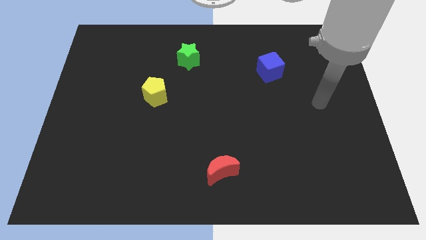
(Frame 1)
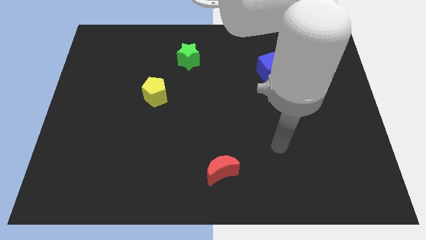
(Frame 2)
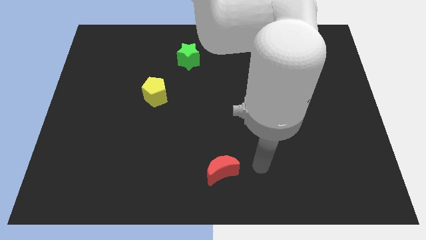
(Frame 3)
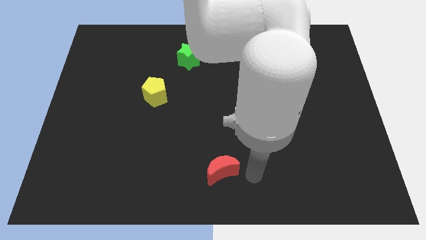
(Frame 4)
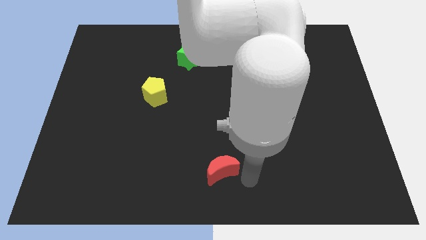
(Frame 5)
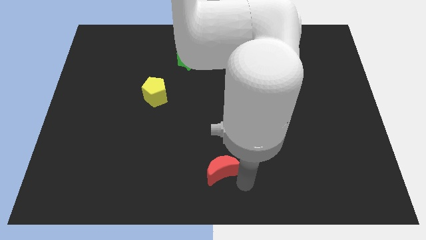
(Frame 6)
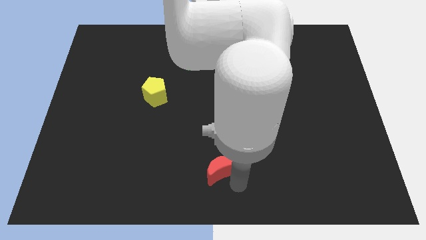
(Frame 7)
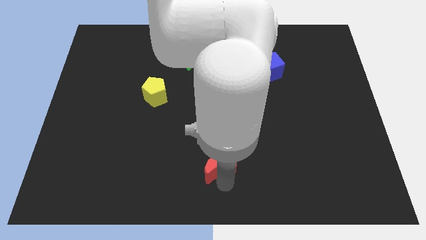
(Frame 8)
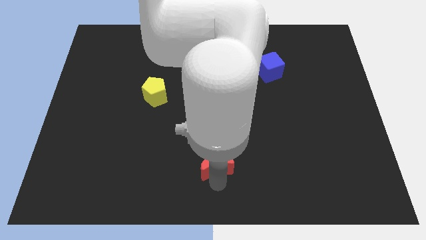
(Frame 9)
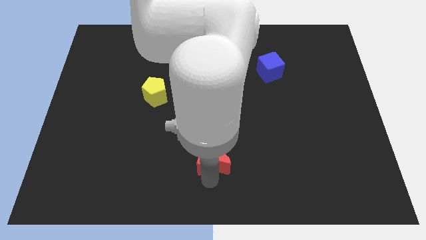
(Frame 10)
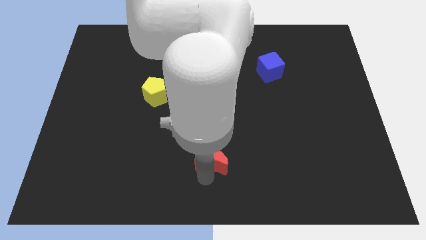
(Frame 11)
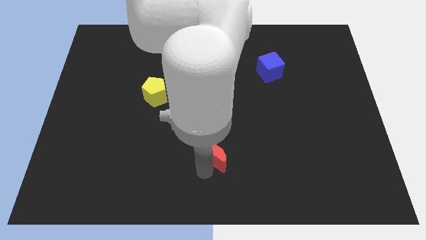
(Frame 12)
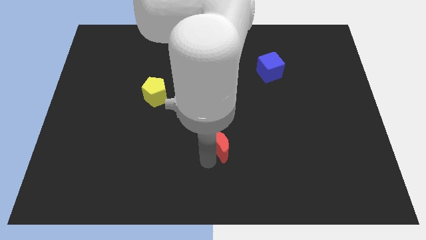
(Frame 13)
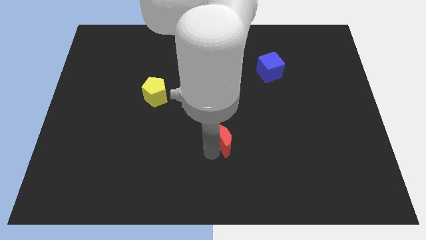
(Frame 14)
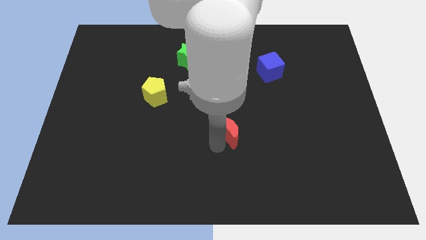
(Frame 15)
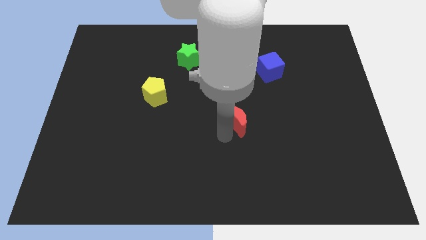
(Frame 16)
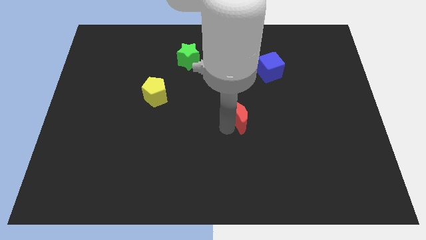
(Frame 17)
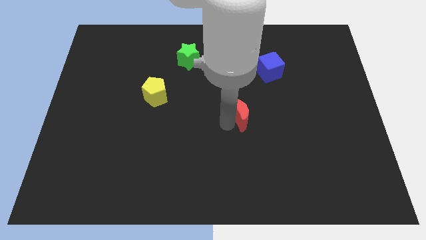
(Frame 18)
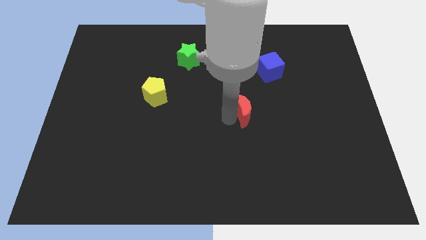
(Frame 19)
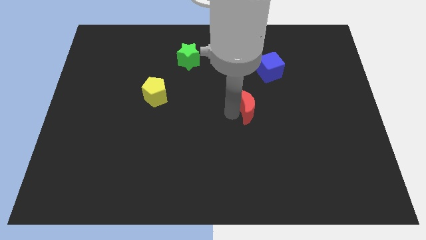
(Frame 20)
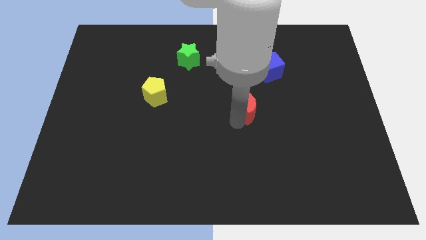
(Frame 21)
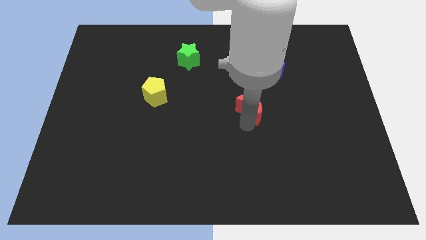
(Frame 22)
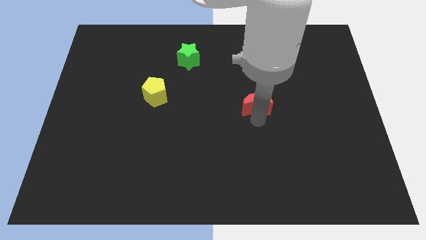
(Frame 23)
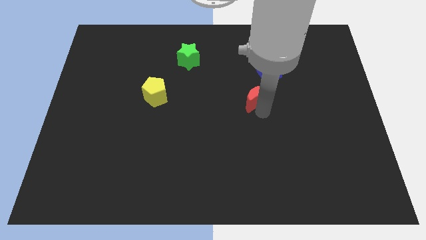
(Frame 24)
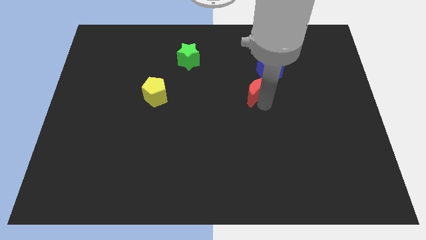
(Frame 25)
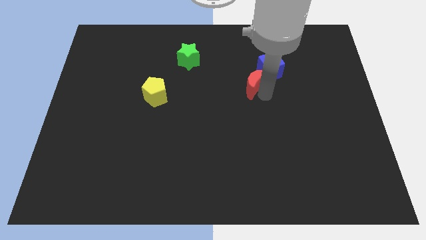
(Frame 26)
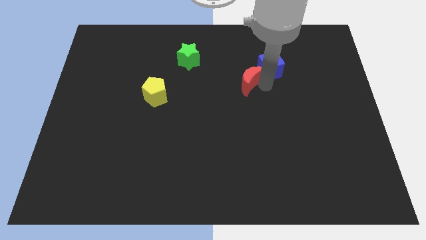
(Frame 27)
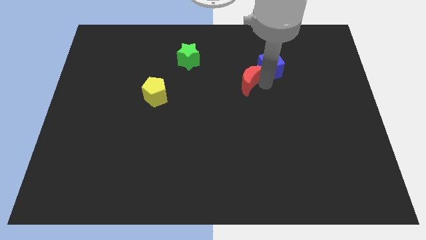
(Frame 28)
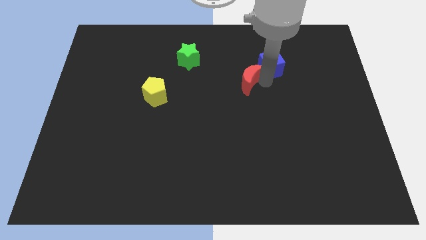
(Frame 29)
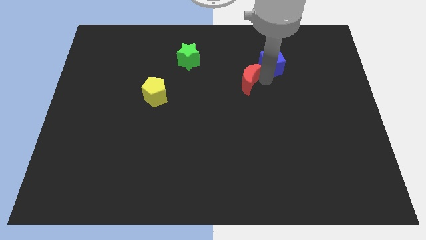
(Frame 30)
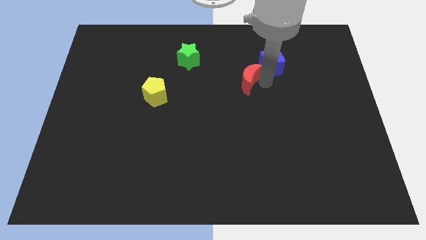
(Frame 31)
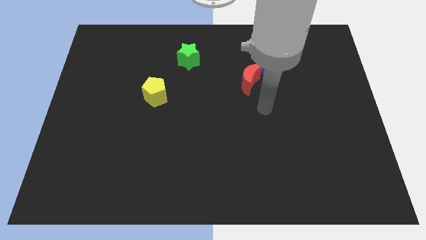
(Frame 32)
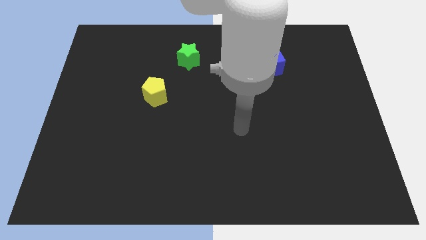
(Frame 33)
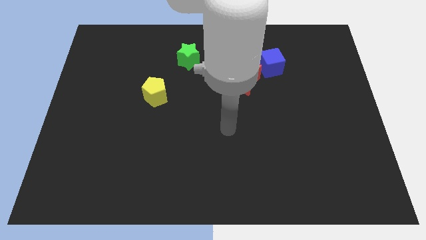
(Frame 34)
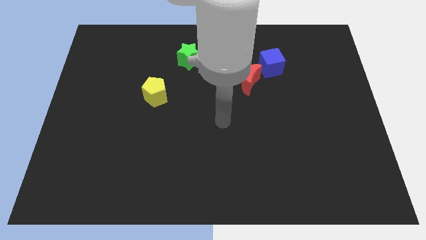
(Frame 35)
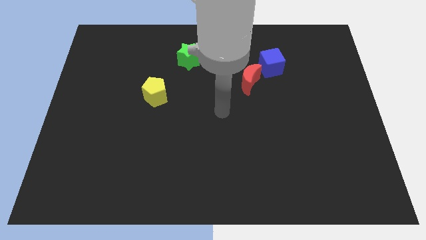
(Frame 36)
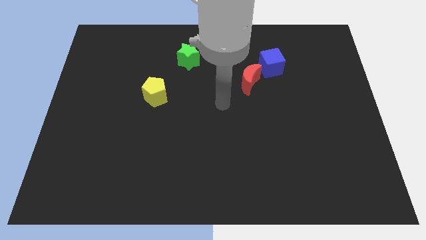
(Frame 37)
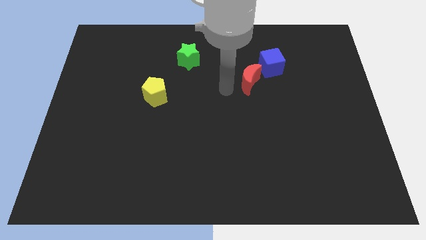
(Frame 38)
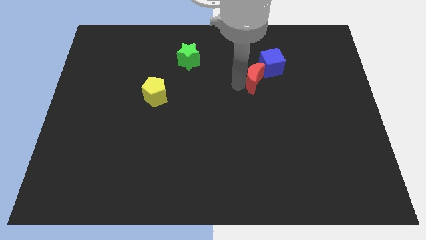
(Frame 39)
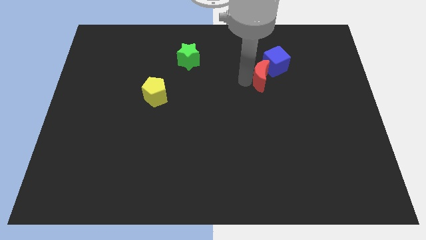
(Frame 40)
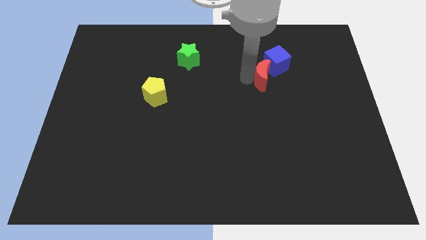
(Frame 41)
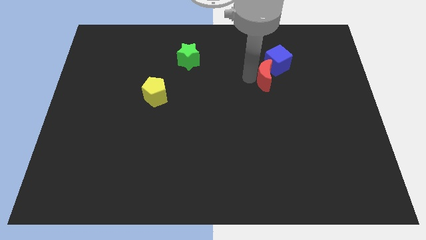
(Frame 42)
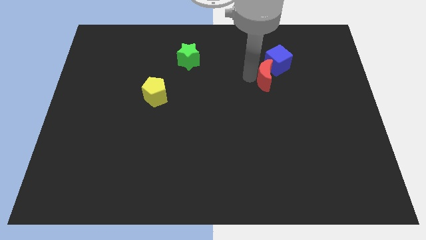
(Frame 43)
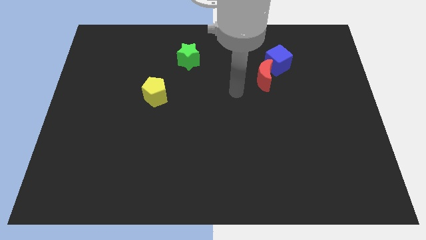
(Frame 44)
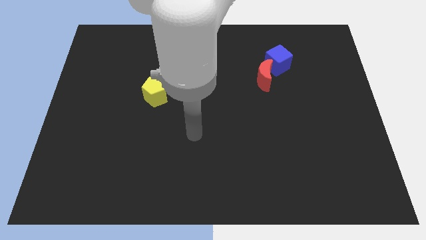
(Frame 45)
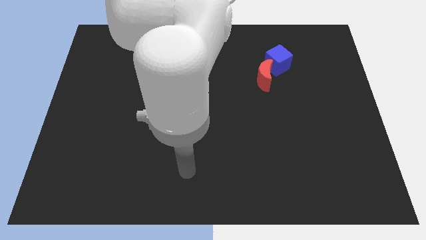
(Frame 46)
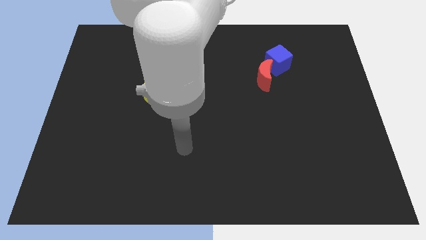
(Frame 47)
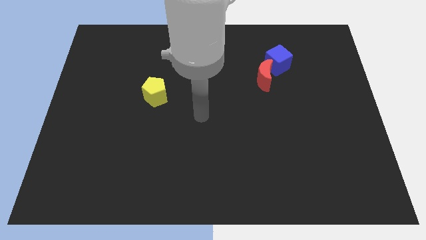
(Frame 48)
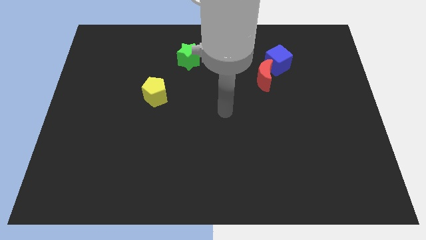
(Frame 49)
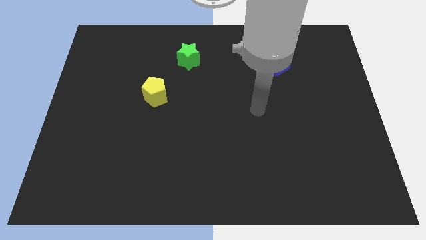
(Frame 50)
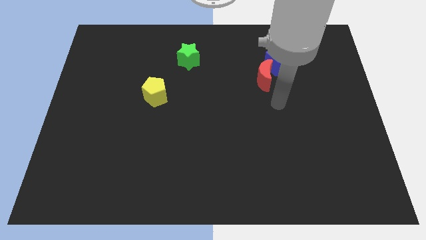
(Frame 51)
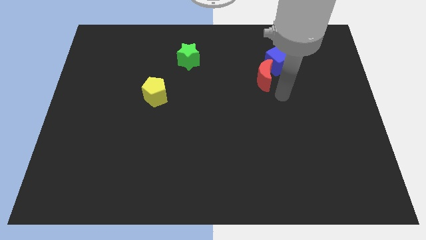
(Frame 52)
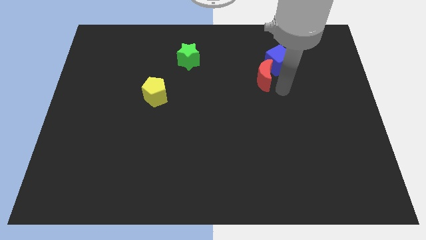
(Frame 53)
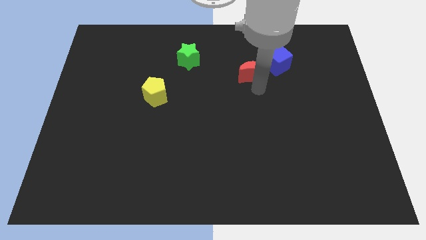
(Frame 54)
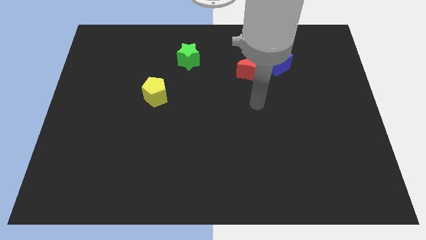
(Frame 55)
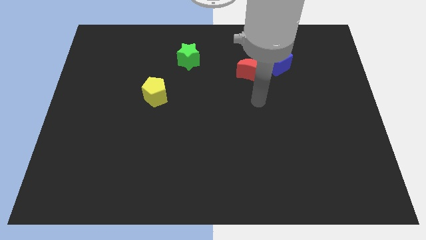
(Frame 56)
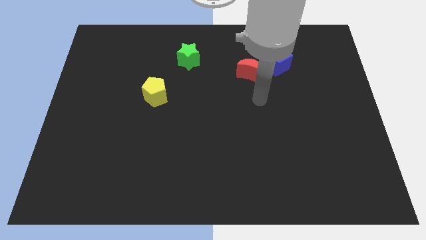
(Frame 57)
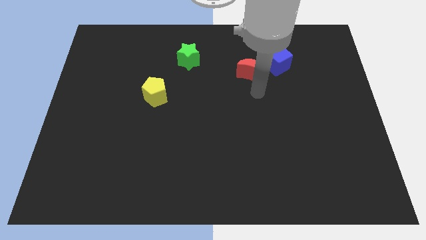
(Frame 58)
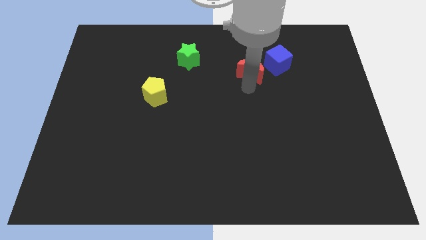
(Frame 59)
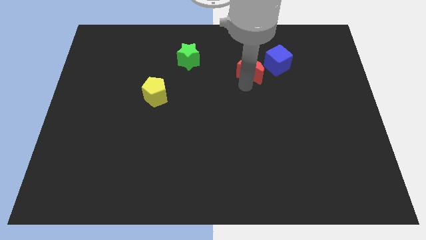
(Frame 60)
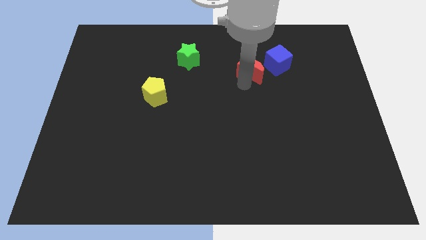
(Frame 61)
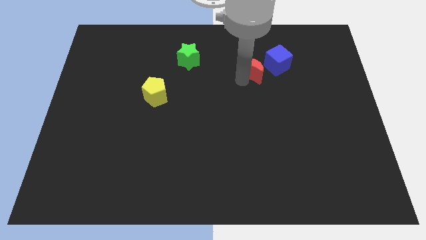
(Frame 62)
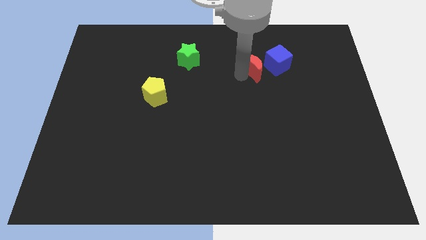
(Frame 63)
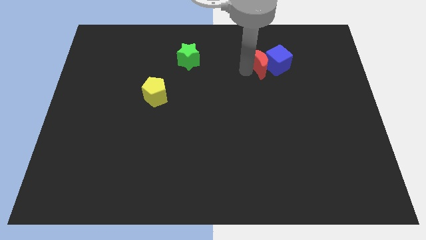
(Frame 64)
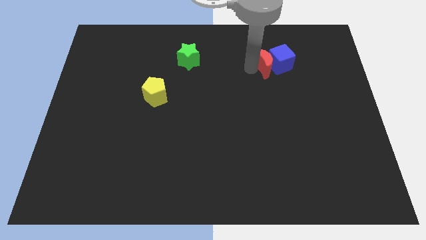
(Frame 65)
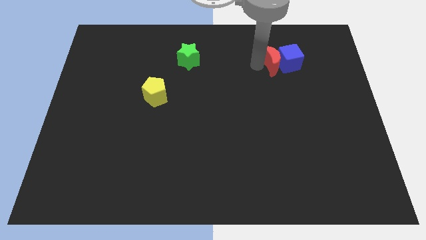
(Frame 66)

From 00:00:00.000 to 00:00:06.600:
put the moon next to the blue block

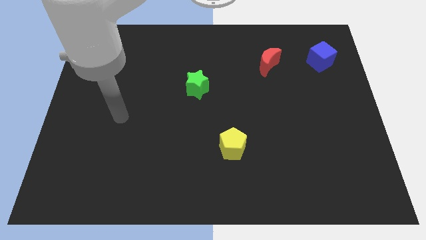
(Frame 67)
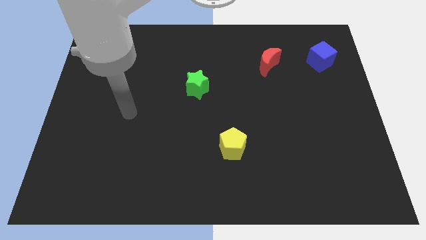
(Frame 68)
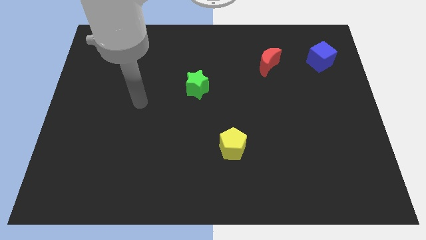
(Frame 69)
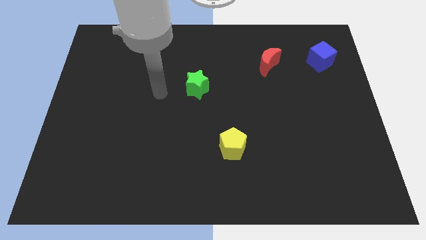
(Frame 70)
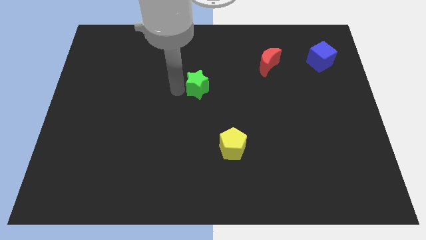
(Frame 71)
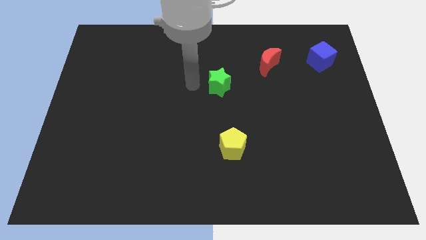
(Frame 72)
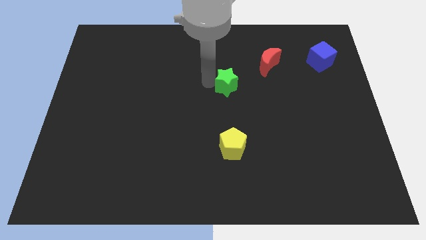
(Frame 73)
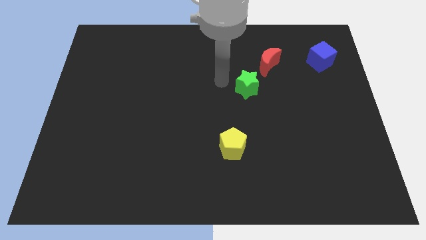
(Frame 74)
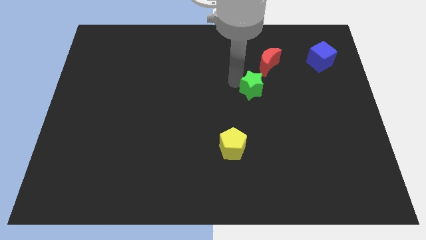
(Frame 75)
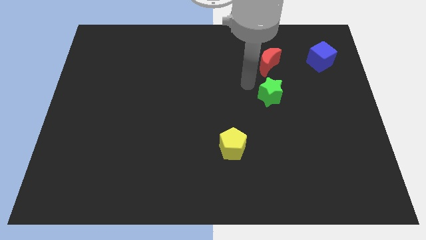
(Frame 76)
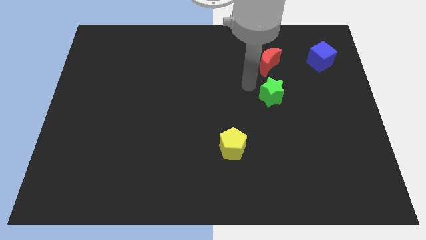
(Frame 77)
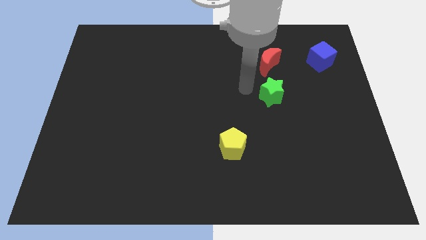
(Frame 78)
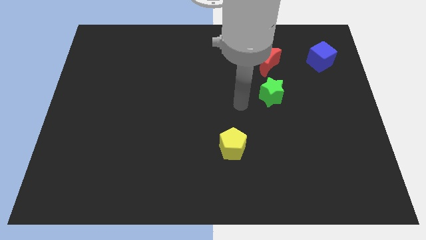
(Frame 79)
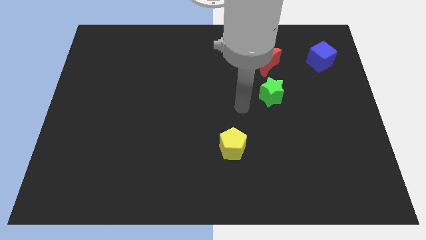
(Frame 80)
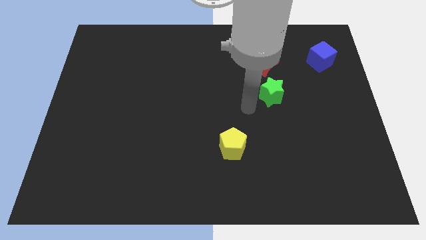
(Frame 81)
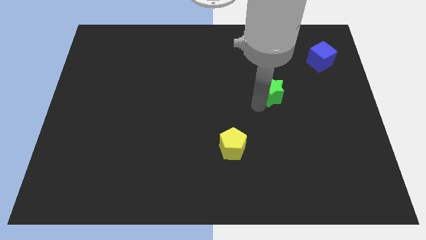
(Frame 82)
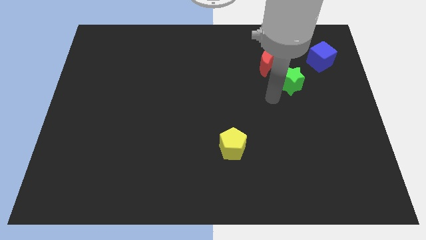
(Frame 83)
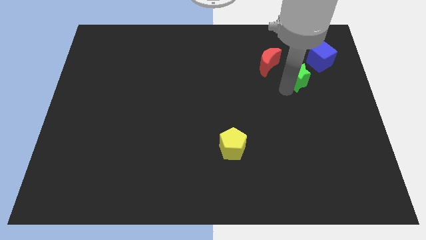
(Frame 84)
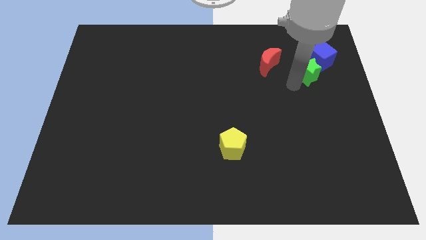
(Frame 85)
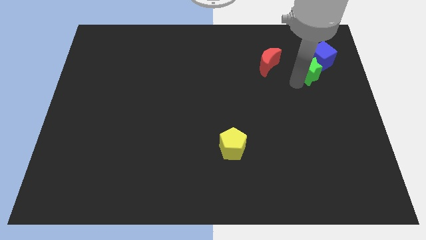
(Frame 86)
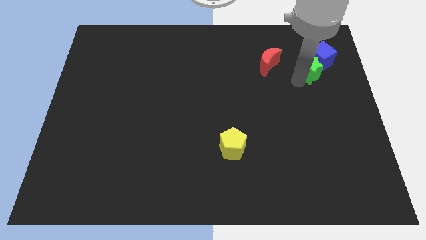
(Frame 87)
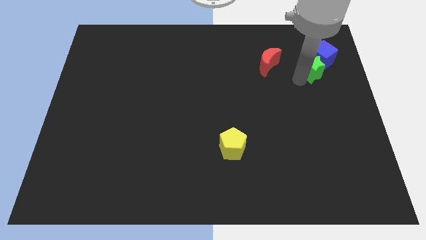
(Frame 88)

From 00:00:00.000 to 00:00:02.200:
put the star next to the blue block
